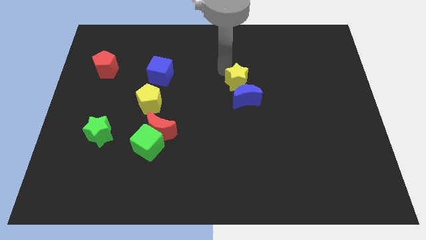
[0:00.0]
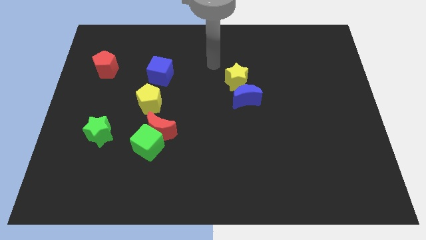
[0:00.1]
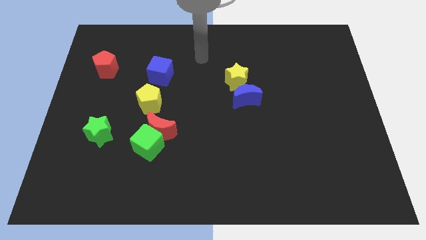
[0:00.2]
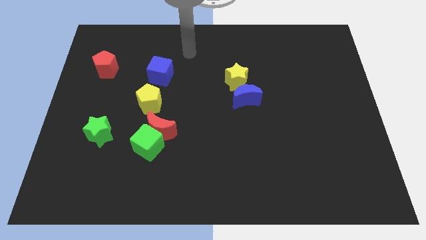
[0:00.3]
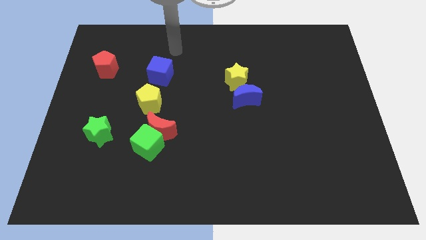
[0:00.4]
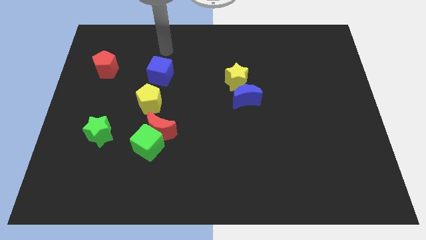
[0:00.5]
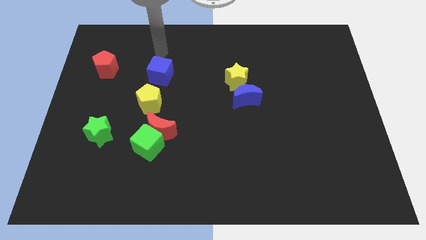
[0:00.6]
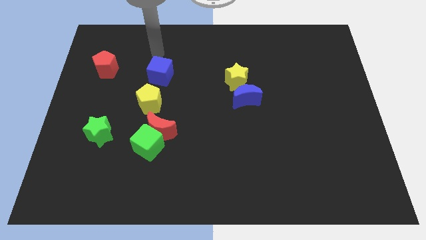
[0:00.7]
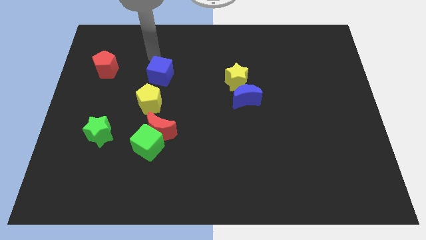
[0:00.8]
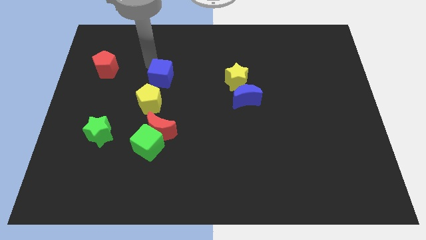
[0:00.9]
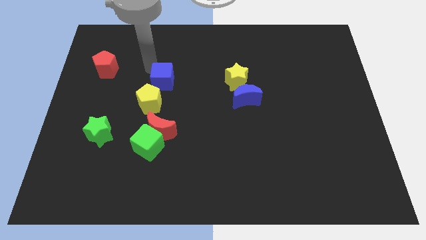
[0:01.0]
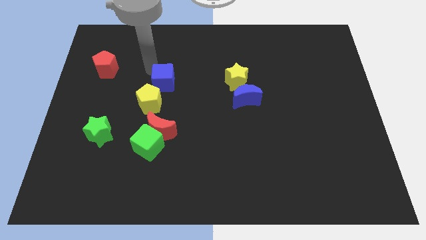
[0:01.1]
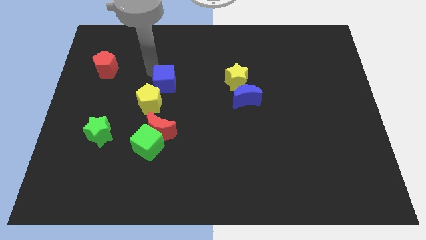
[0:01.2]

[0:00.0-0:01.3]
move the arm away from the yellow star

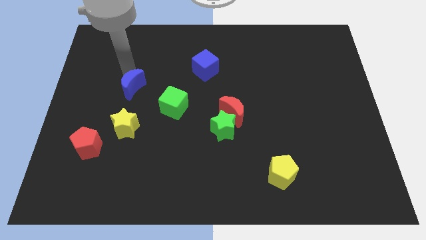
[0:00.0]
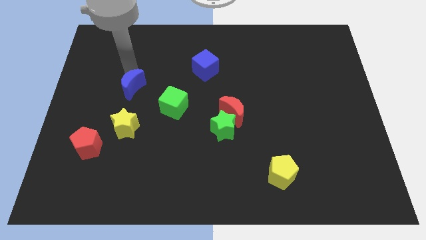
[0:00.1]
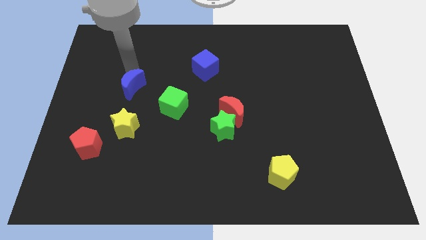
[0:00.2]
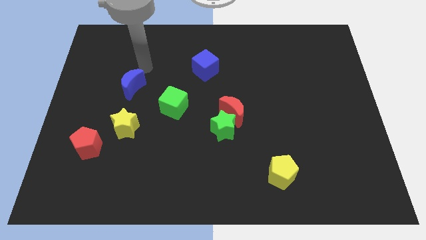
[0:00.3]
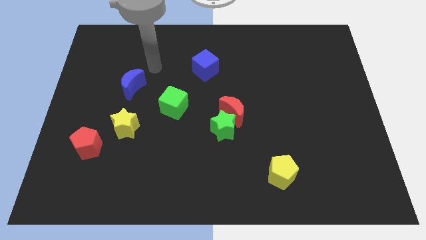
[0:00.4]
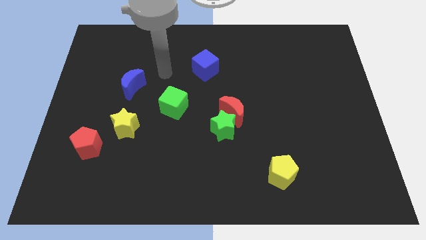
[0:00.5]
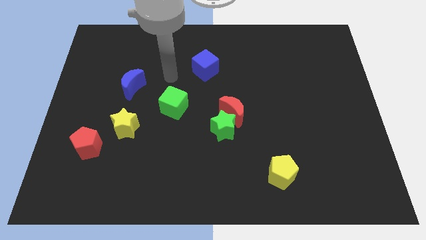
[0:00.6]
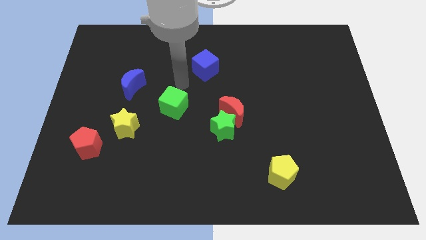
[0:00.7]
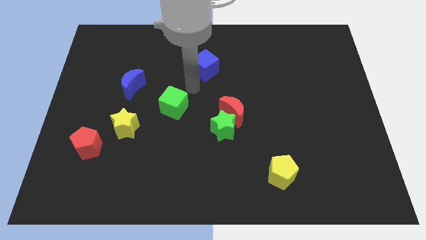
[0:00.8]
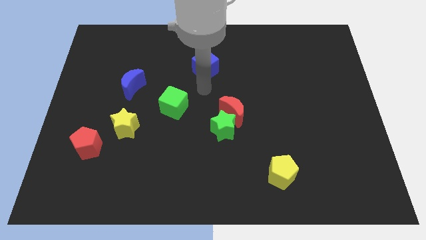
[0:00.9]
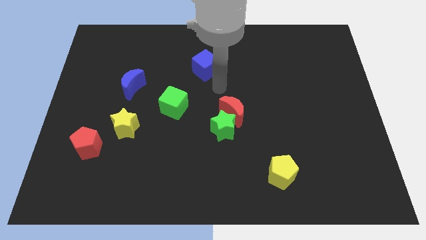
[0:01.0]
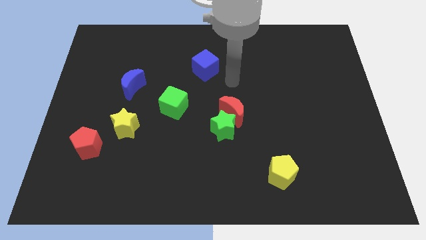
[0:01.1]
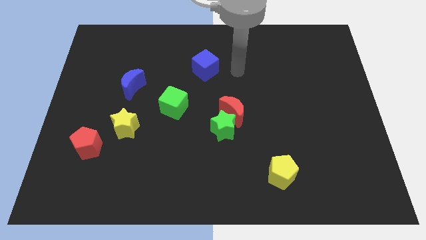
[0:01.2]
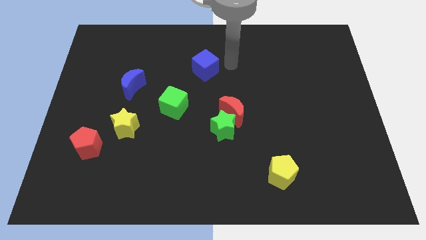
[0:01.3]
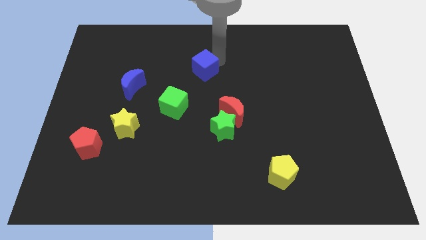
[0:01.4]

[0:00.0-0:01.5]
move your arm towards the blue cube

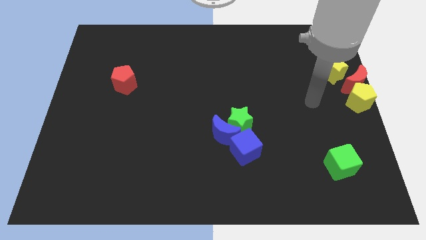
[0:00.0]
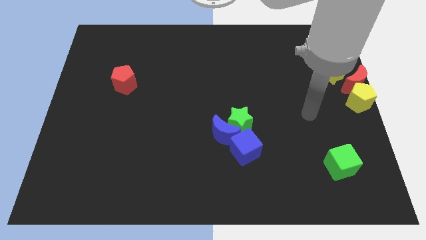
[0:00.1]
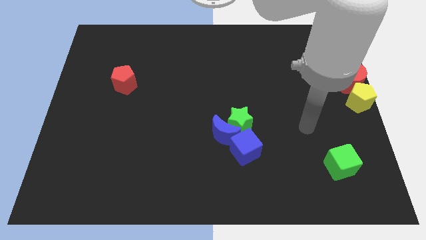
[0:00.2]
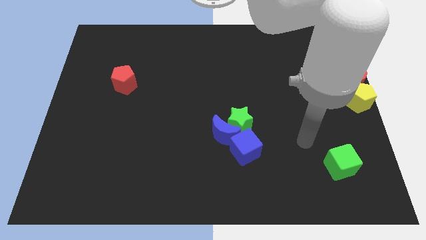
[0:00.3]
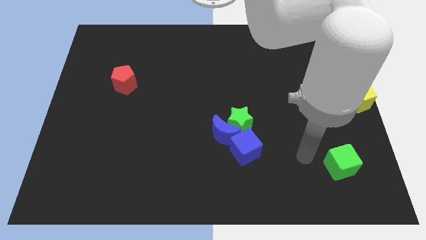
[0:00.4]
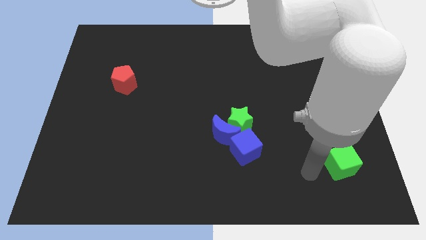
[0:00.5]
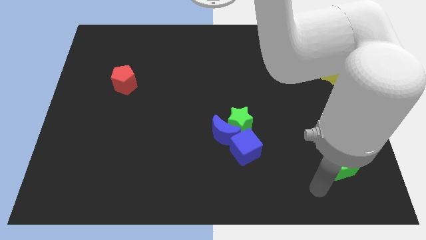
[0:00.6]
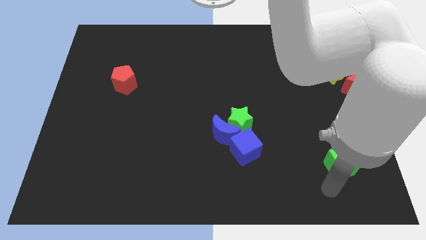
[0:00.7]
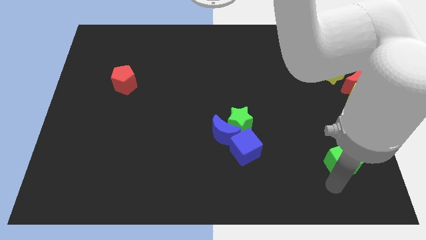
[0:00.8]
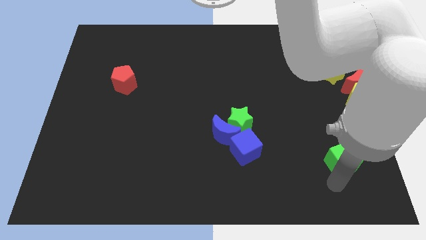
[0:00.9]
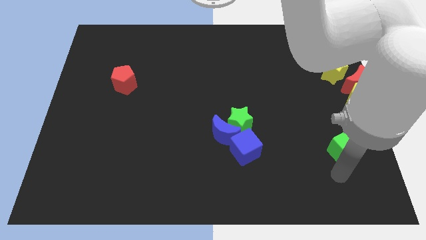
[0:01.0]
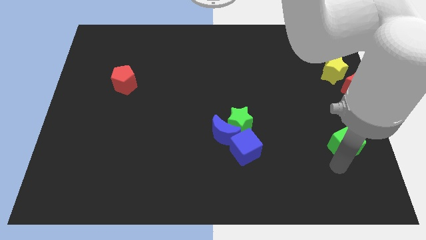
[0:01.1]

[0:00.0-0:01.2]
move the green cube horizontally to the right side of the blue cube

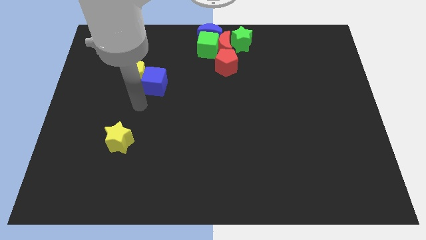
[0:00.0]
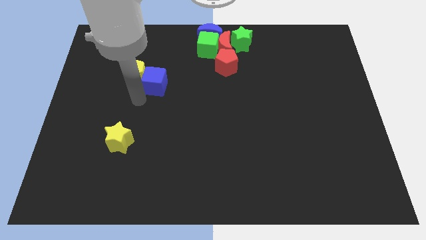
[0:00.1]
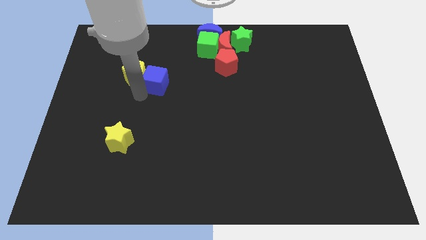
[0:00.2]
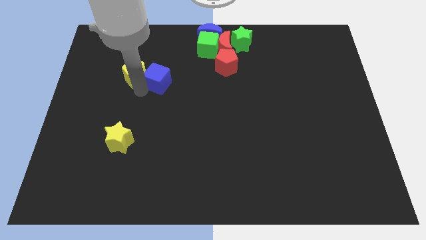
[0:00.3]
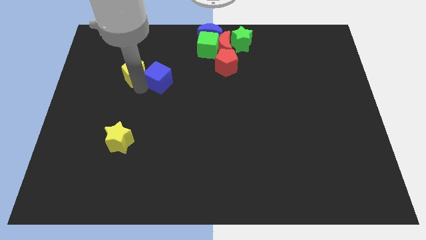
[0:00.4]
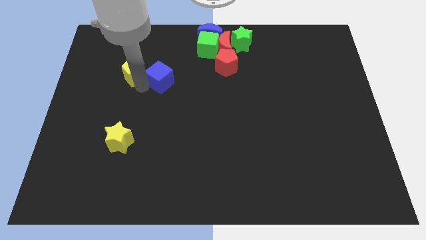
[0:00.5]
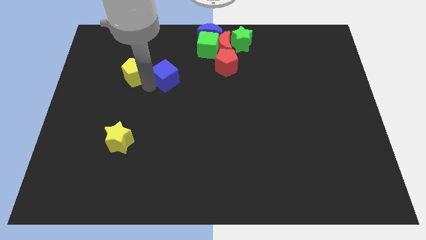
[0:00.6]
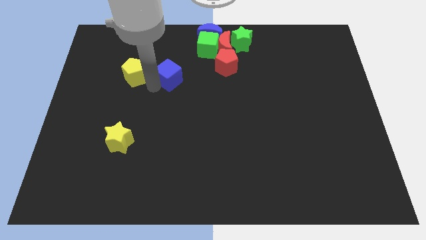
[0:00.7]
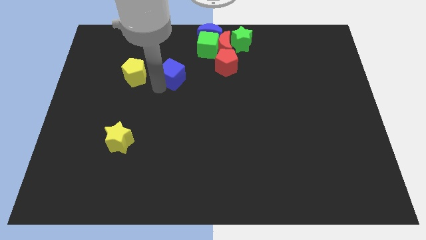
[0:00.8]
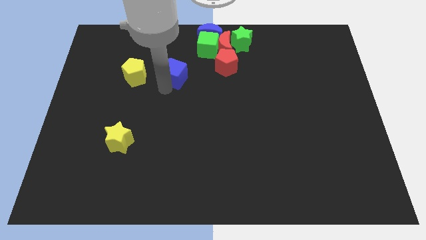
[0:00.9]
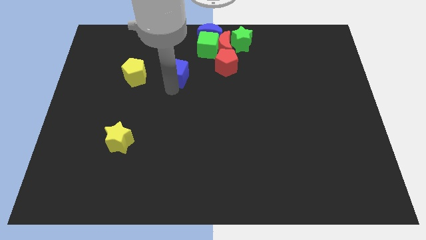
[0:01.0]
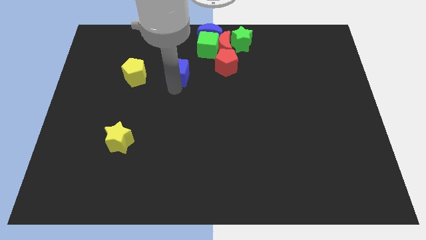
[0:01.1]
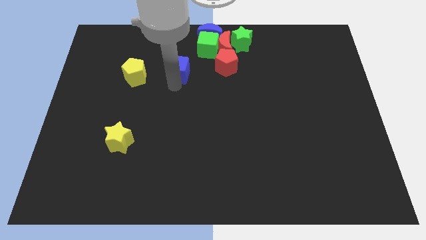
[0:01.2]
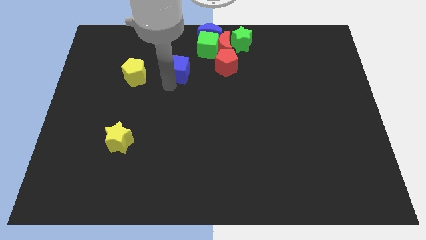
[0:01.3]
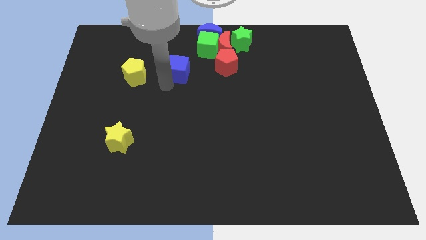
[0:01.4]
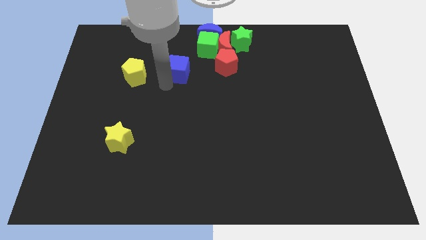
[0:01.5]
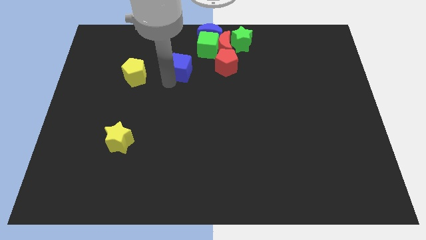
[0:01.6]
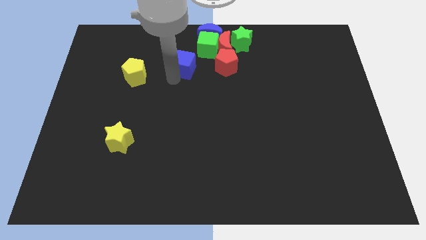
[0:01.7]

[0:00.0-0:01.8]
separate the blue cube and the yellow pentagon

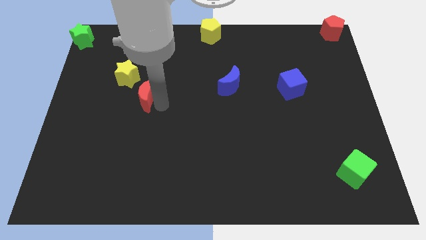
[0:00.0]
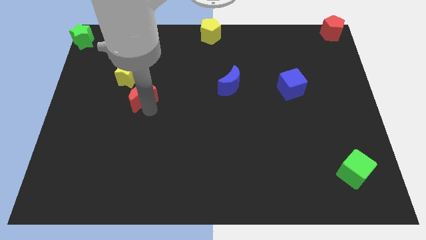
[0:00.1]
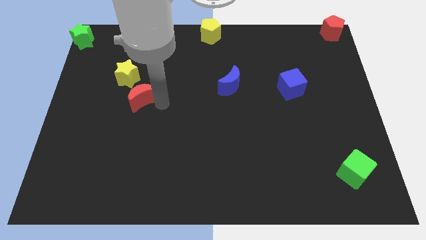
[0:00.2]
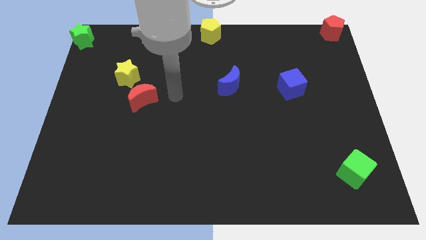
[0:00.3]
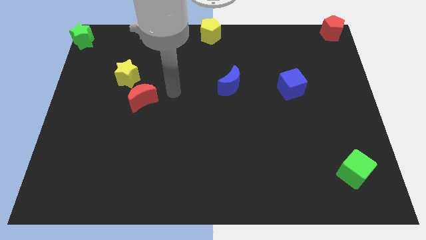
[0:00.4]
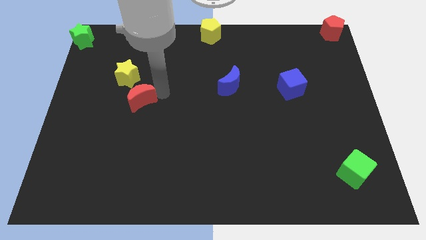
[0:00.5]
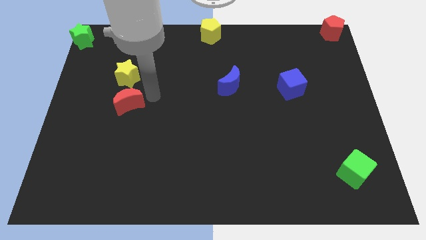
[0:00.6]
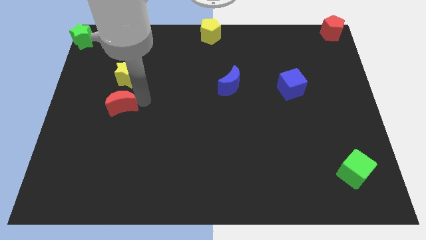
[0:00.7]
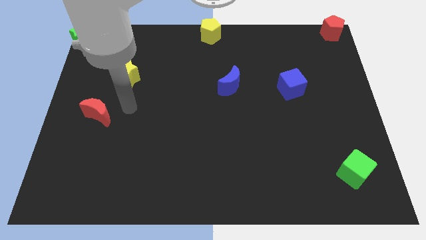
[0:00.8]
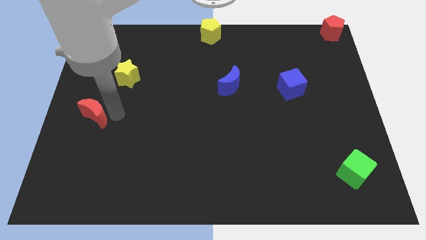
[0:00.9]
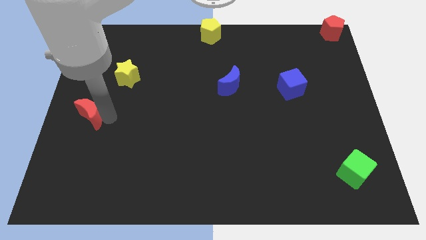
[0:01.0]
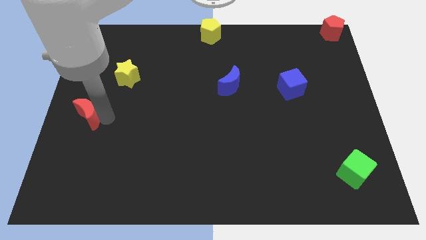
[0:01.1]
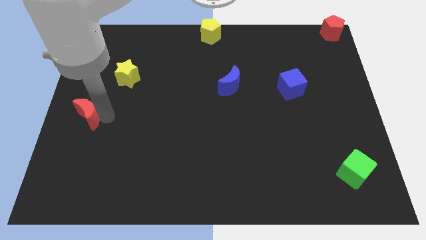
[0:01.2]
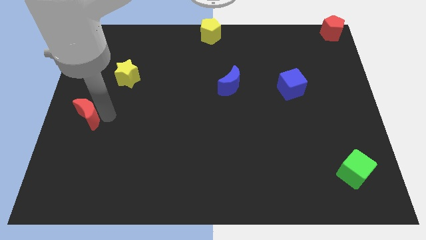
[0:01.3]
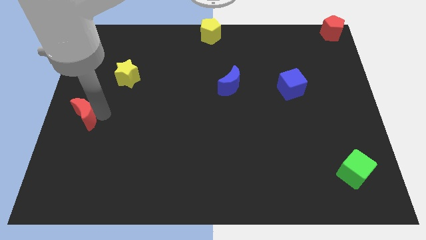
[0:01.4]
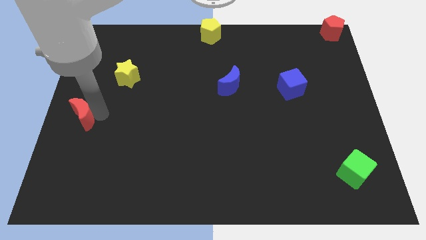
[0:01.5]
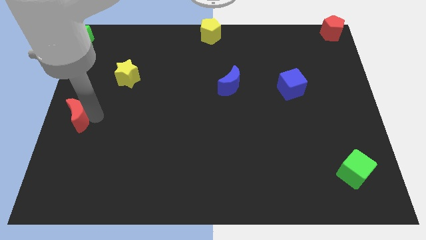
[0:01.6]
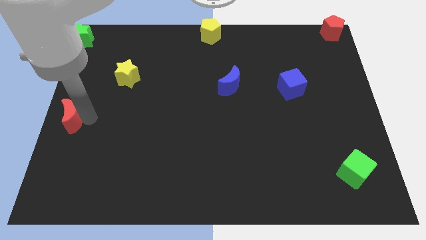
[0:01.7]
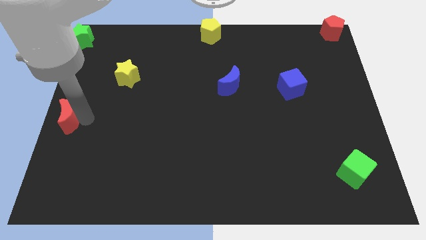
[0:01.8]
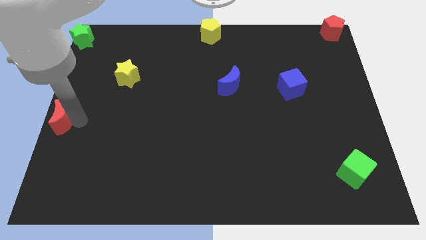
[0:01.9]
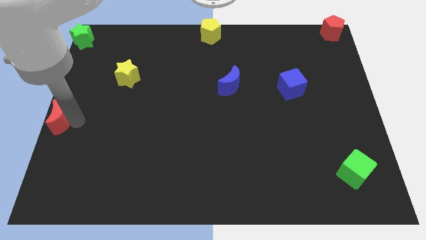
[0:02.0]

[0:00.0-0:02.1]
place red moon at the center left

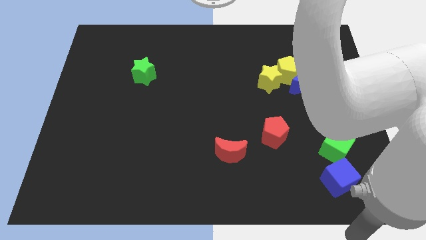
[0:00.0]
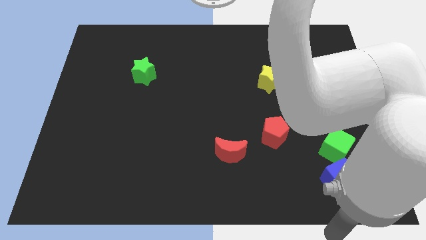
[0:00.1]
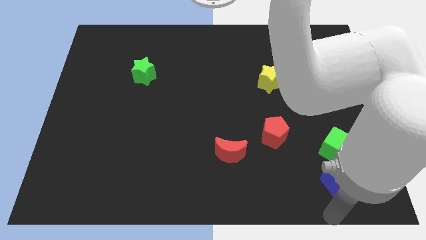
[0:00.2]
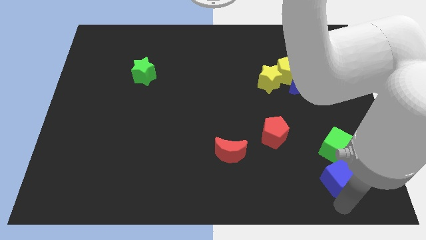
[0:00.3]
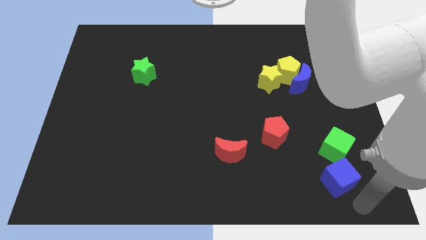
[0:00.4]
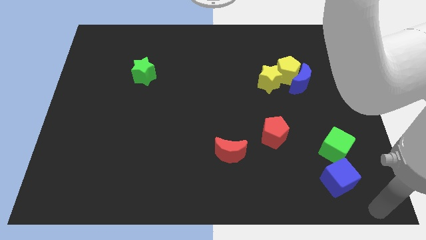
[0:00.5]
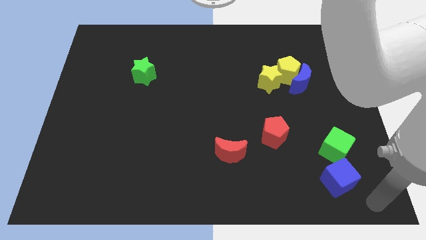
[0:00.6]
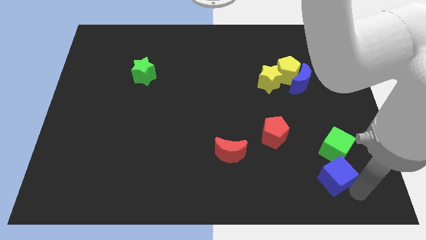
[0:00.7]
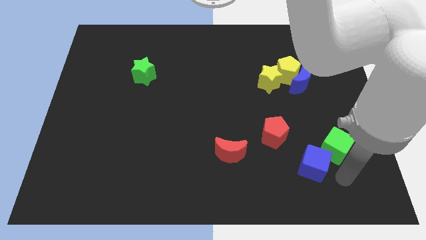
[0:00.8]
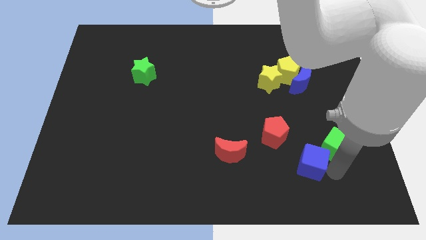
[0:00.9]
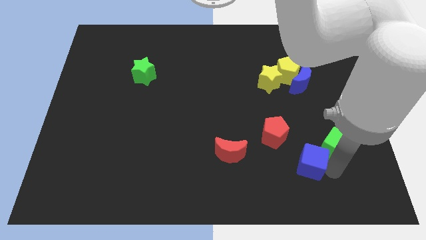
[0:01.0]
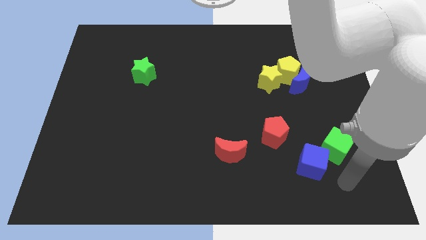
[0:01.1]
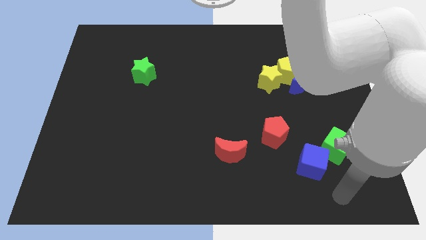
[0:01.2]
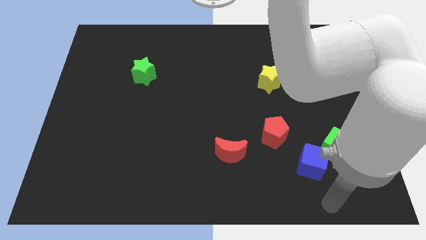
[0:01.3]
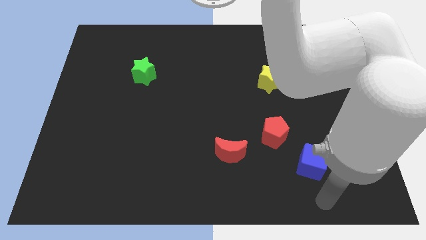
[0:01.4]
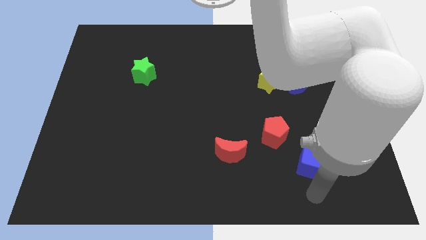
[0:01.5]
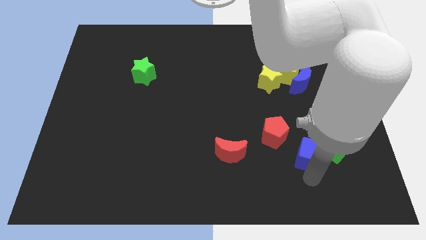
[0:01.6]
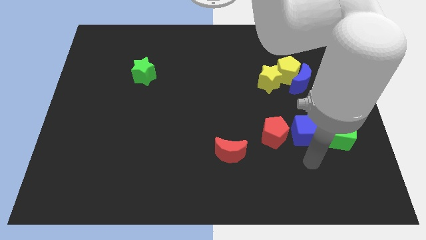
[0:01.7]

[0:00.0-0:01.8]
place the blue cube in between the red pentagon and green cube
